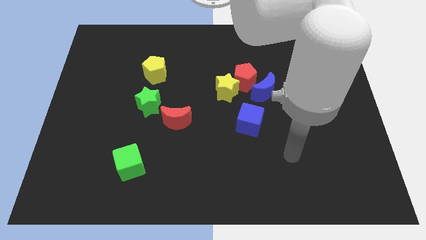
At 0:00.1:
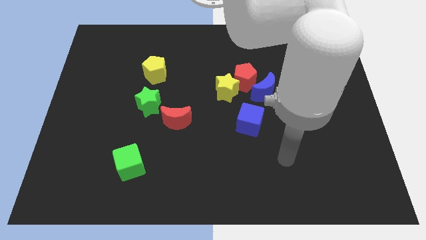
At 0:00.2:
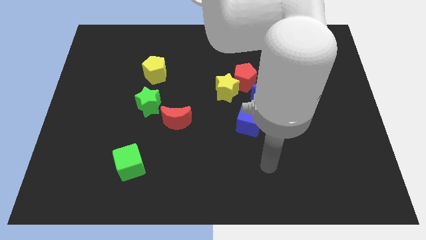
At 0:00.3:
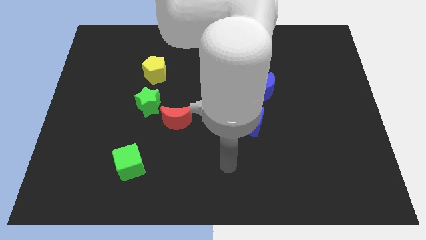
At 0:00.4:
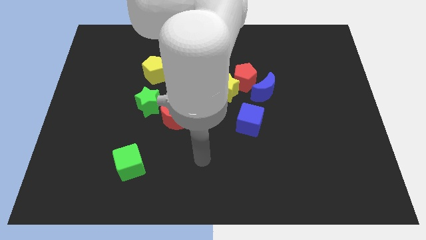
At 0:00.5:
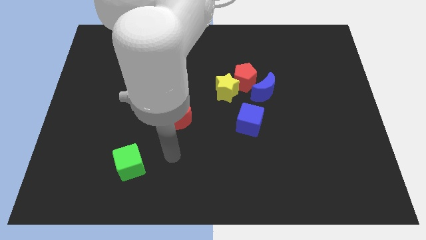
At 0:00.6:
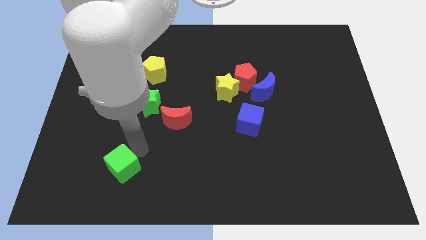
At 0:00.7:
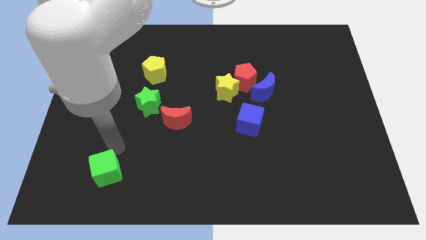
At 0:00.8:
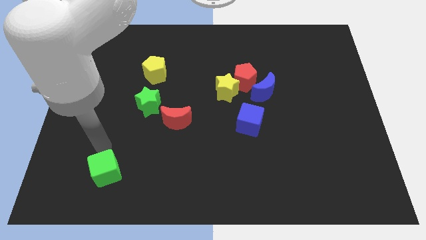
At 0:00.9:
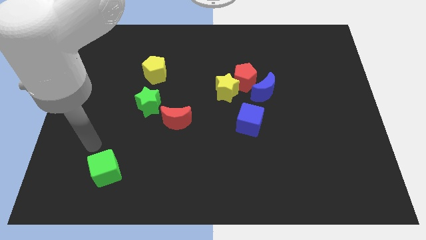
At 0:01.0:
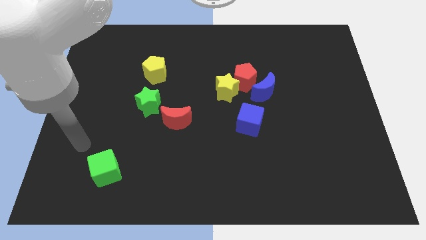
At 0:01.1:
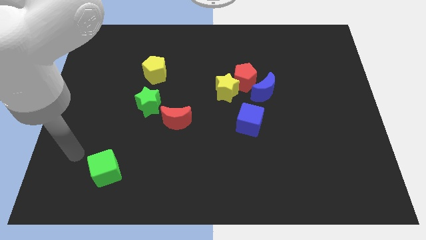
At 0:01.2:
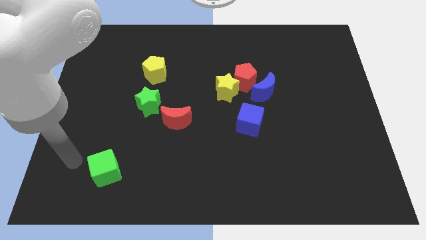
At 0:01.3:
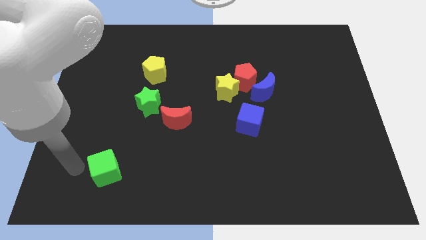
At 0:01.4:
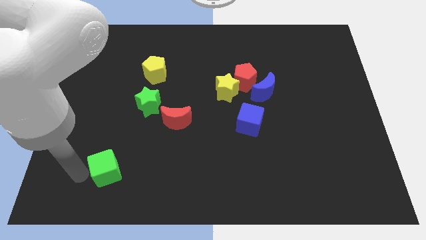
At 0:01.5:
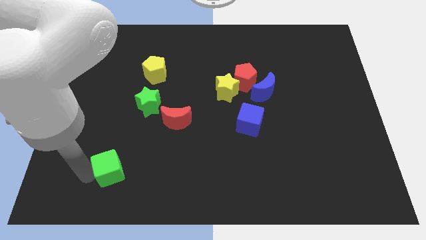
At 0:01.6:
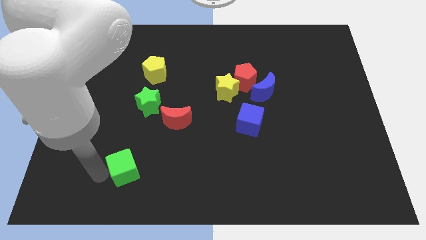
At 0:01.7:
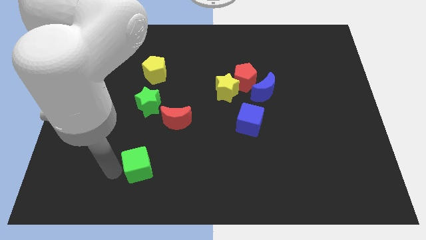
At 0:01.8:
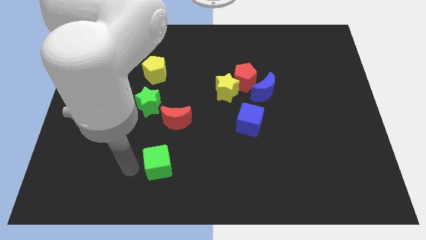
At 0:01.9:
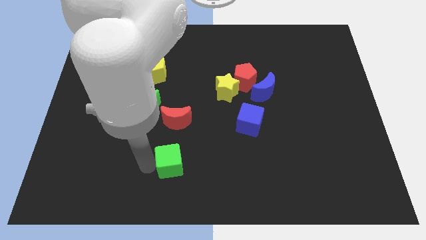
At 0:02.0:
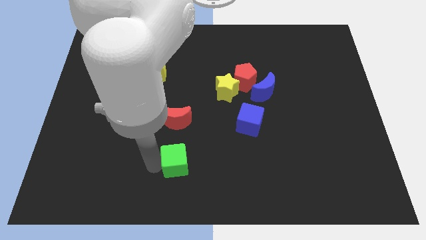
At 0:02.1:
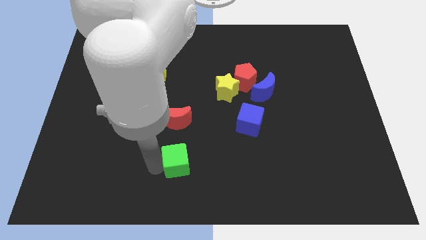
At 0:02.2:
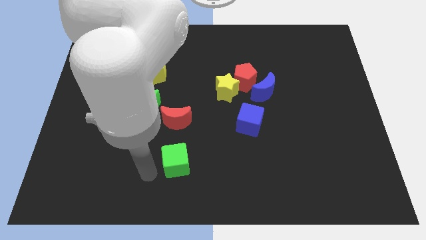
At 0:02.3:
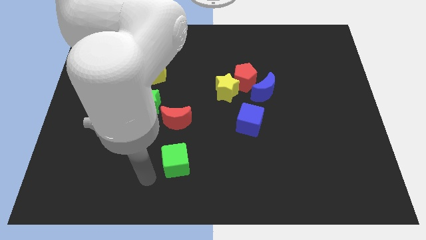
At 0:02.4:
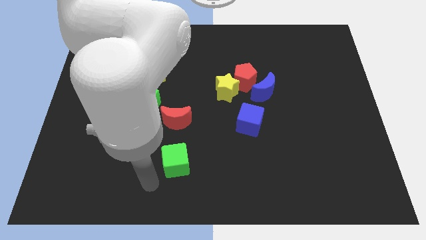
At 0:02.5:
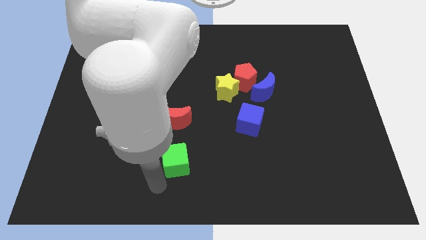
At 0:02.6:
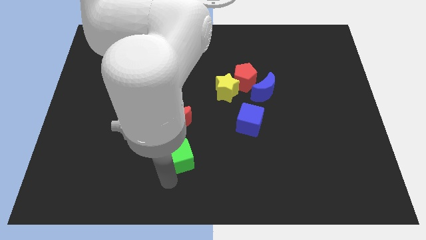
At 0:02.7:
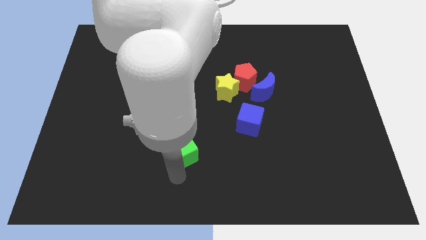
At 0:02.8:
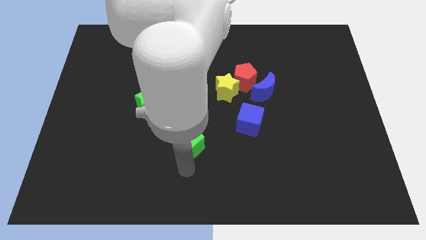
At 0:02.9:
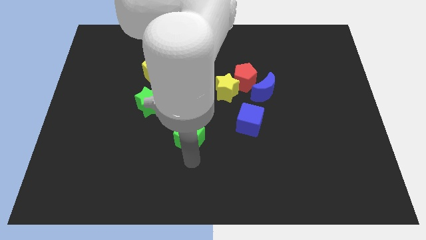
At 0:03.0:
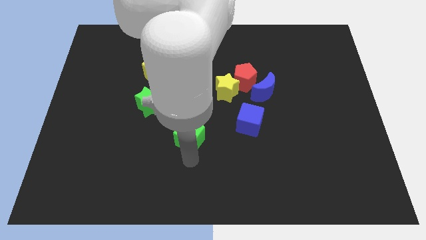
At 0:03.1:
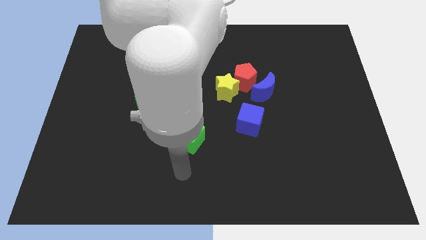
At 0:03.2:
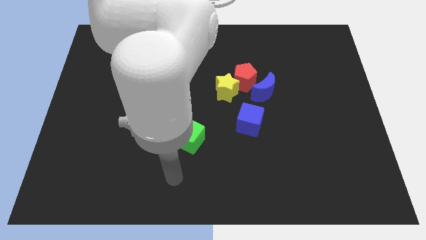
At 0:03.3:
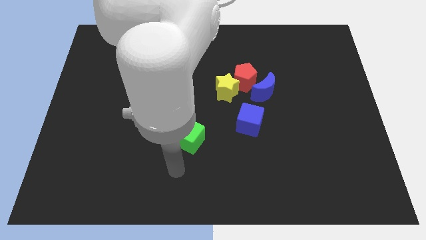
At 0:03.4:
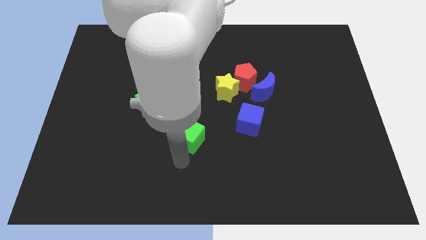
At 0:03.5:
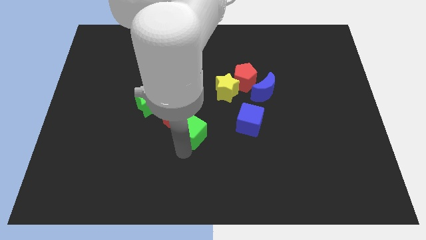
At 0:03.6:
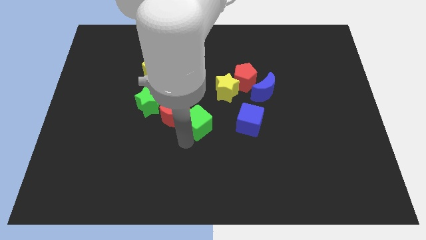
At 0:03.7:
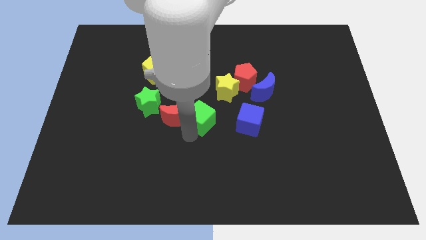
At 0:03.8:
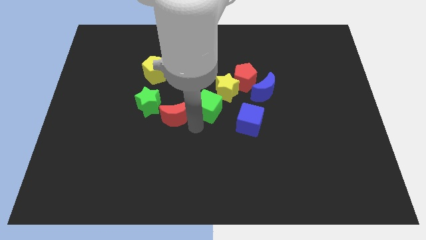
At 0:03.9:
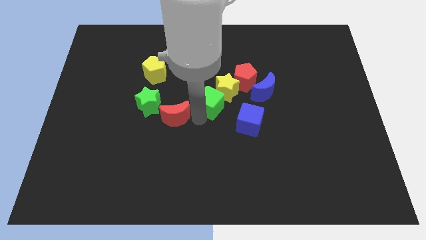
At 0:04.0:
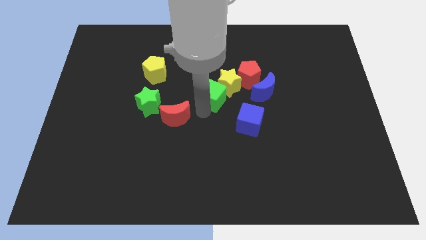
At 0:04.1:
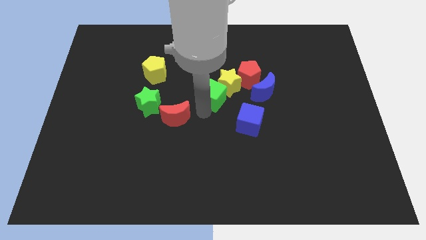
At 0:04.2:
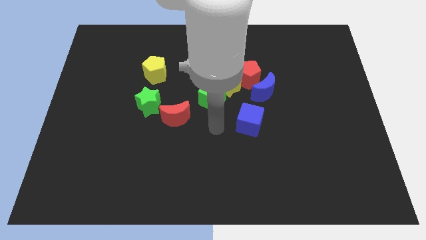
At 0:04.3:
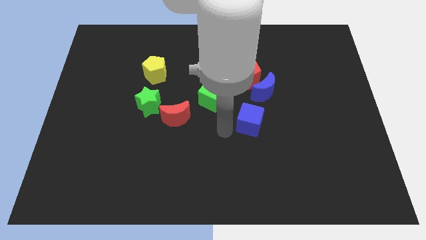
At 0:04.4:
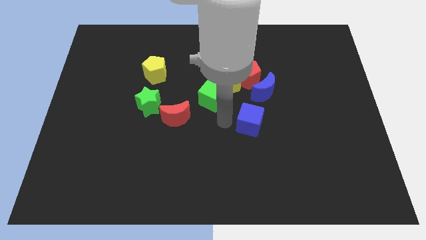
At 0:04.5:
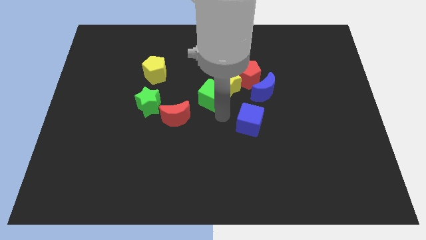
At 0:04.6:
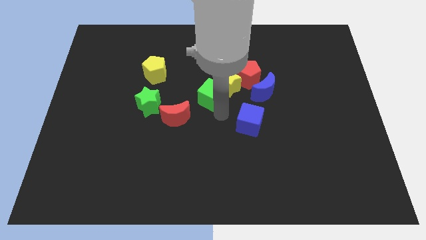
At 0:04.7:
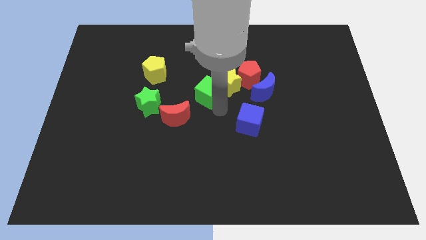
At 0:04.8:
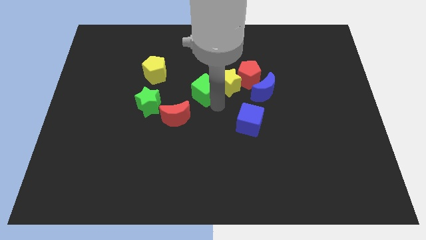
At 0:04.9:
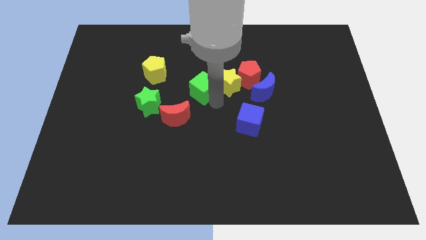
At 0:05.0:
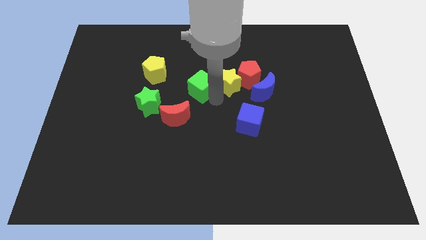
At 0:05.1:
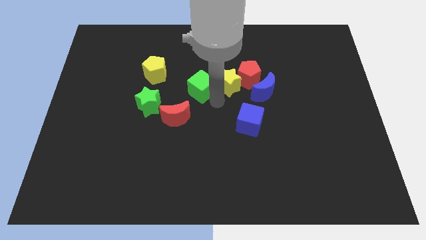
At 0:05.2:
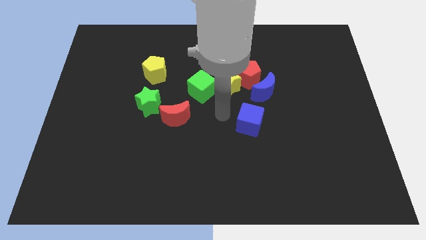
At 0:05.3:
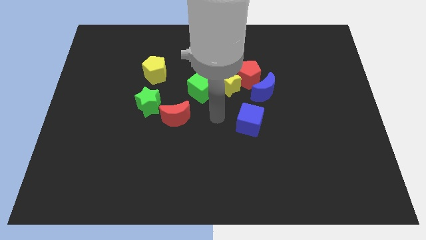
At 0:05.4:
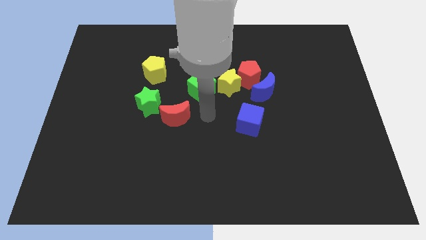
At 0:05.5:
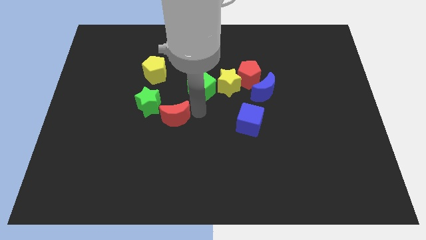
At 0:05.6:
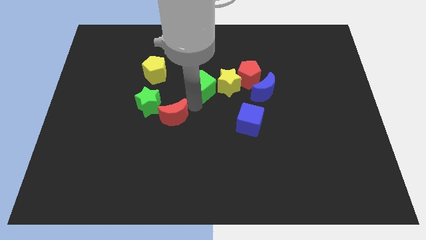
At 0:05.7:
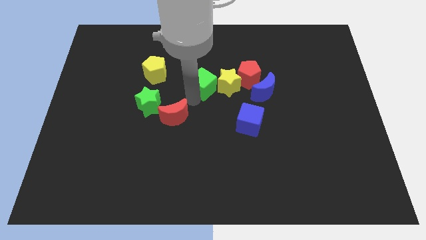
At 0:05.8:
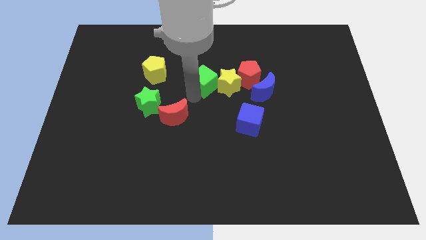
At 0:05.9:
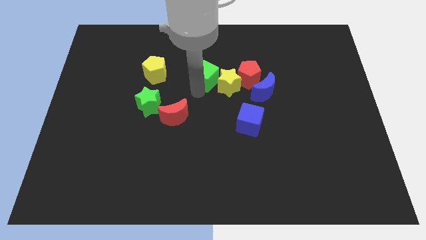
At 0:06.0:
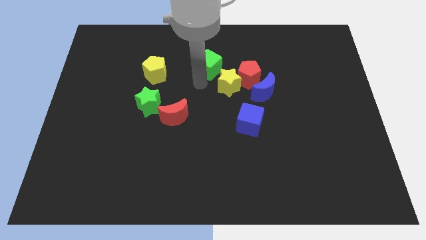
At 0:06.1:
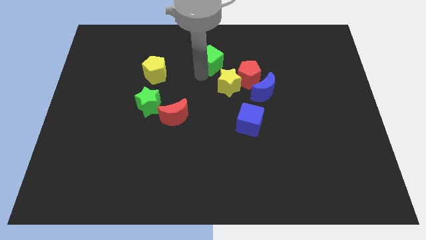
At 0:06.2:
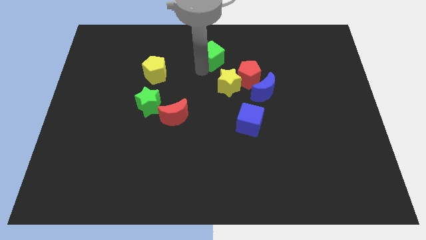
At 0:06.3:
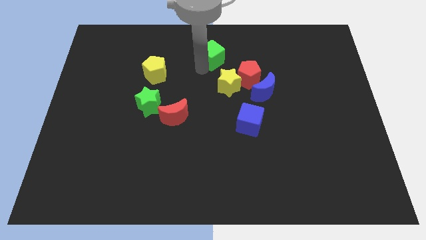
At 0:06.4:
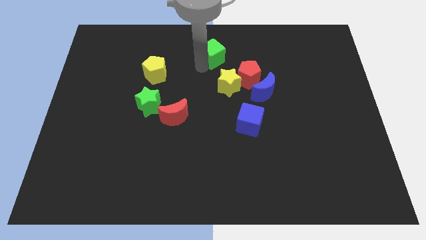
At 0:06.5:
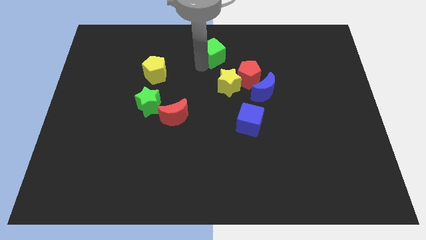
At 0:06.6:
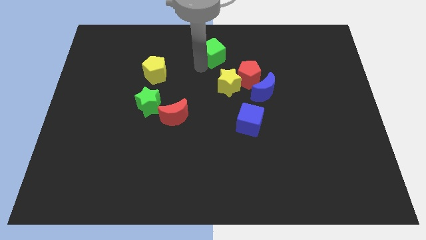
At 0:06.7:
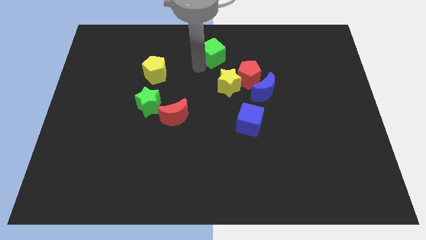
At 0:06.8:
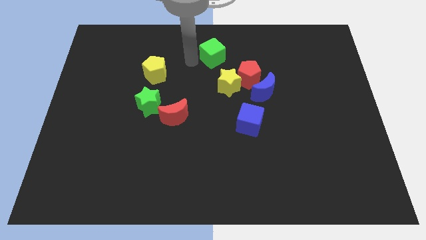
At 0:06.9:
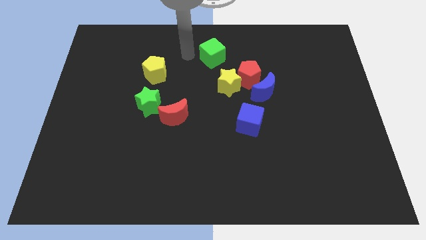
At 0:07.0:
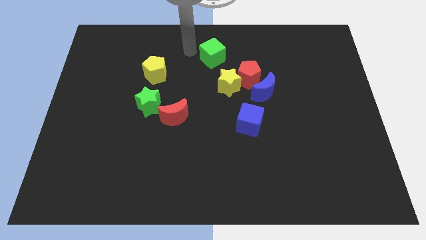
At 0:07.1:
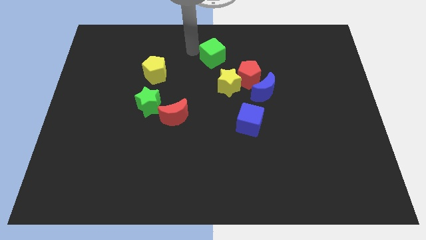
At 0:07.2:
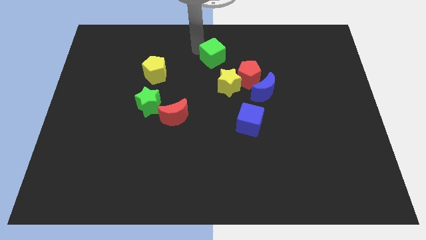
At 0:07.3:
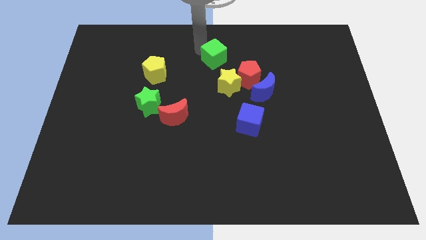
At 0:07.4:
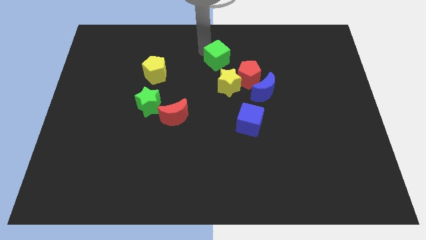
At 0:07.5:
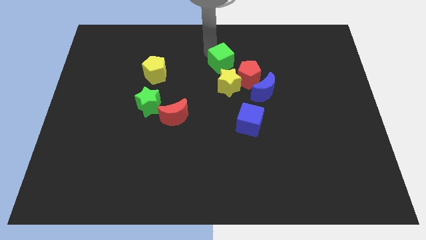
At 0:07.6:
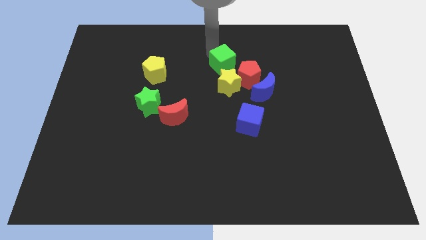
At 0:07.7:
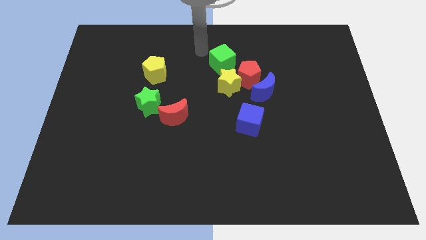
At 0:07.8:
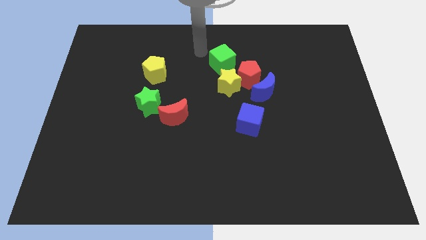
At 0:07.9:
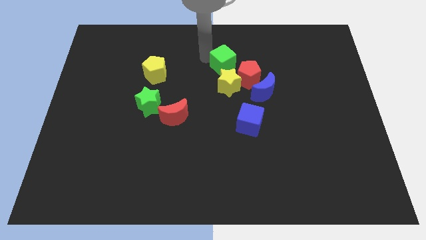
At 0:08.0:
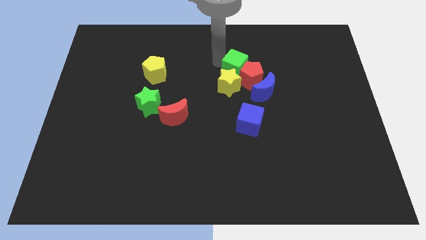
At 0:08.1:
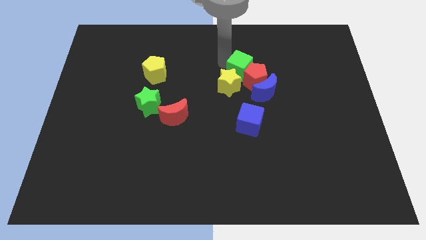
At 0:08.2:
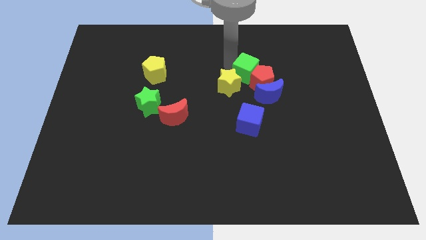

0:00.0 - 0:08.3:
push the green cube close to the red pentagon

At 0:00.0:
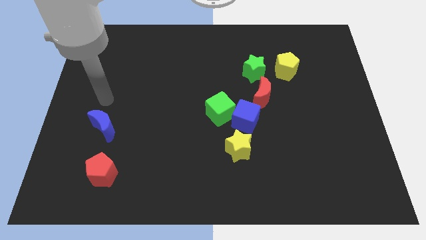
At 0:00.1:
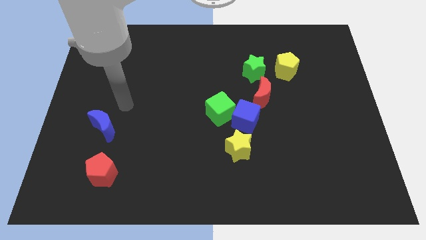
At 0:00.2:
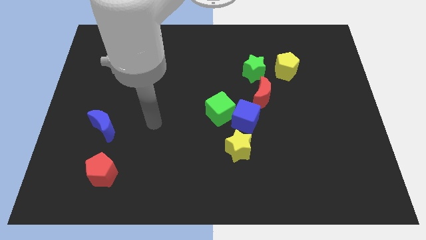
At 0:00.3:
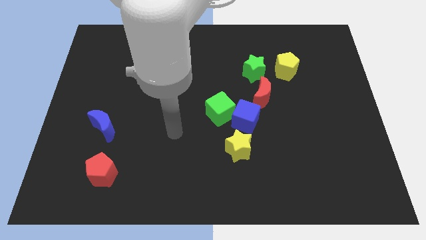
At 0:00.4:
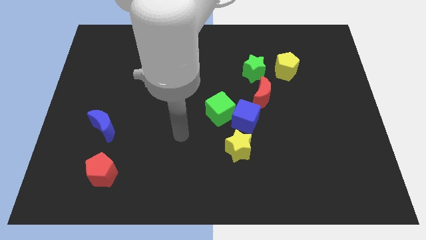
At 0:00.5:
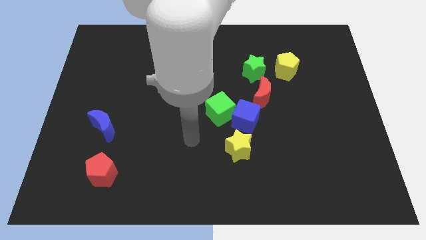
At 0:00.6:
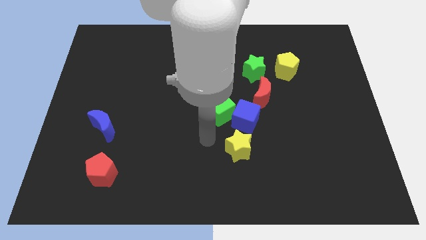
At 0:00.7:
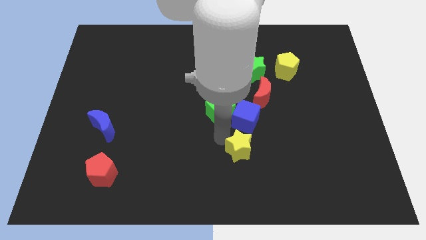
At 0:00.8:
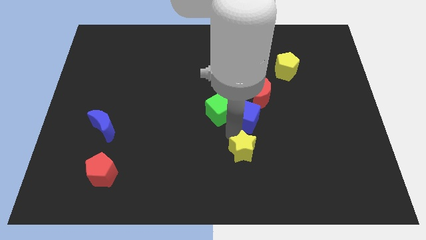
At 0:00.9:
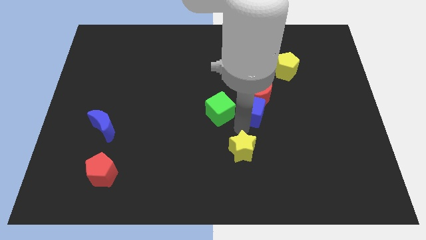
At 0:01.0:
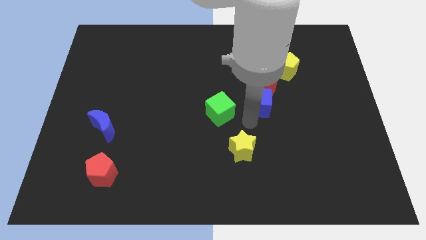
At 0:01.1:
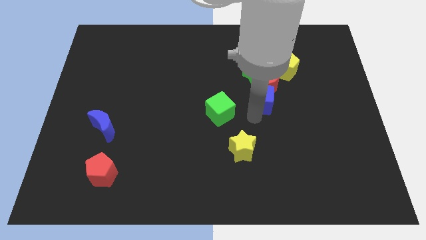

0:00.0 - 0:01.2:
slide the blue cube to the red moon
